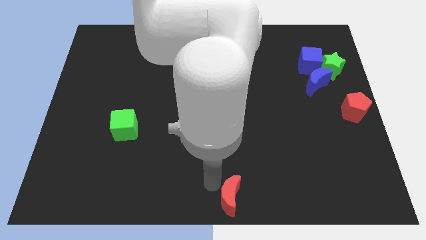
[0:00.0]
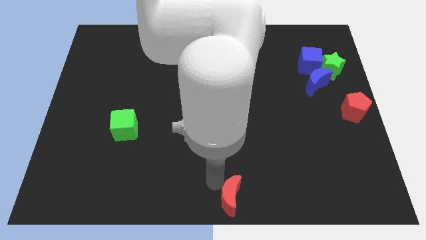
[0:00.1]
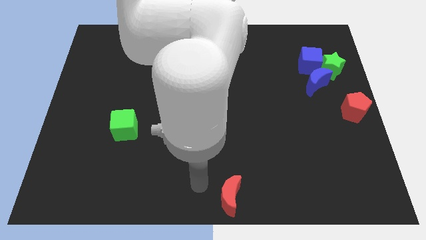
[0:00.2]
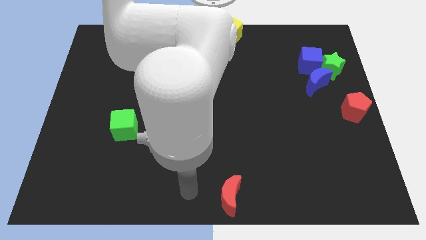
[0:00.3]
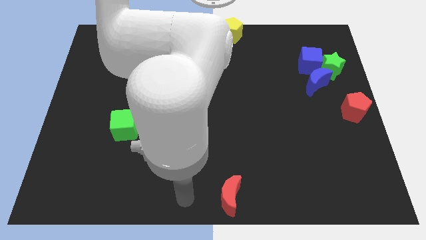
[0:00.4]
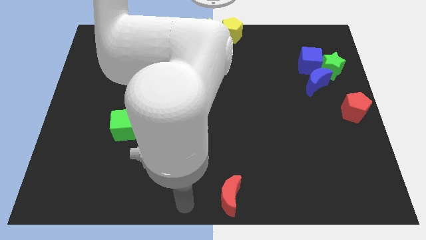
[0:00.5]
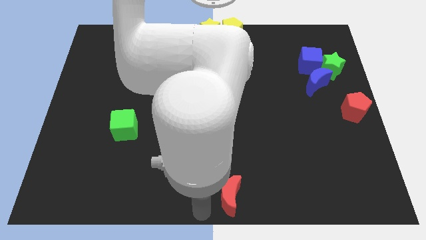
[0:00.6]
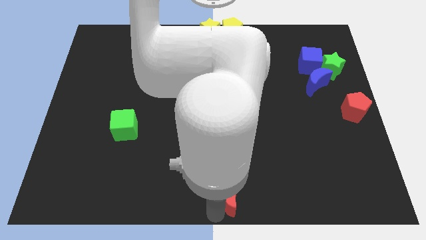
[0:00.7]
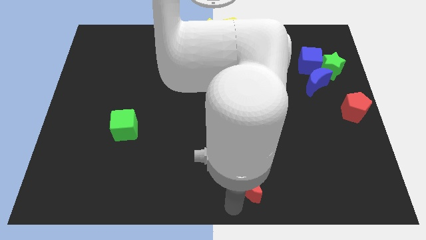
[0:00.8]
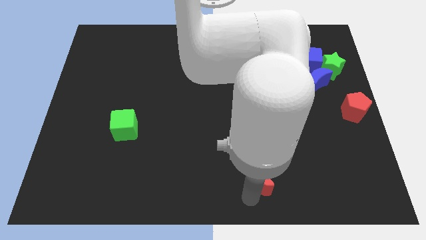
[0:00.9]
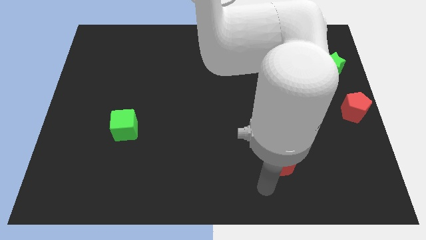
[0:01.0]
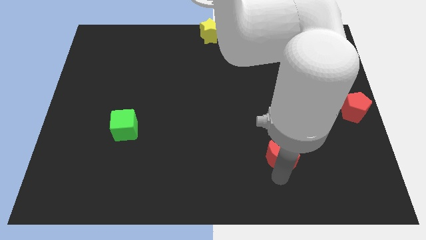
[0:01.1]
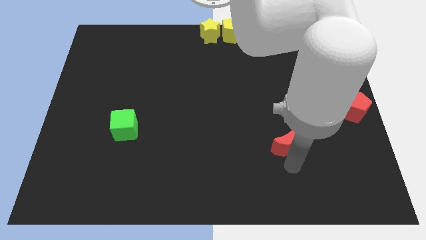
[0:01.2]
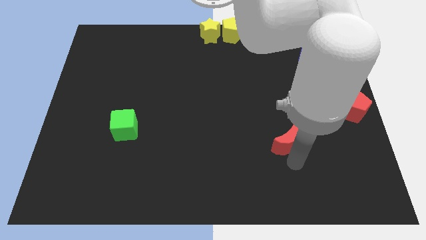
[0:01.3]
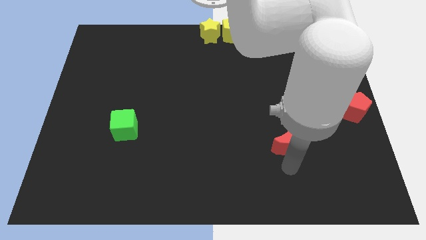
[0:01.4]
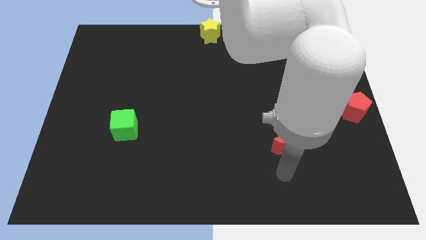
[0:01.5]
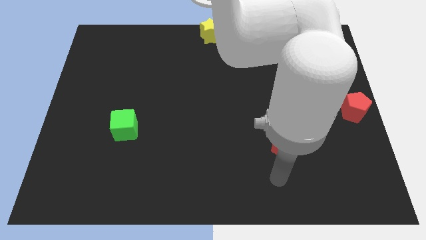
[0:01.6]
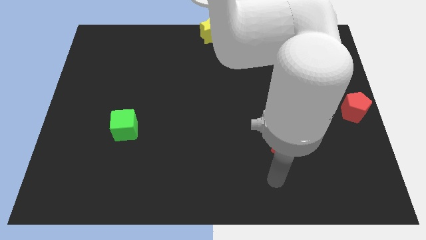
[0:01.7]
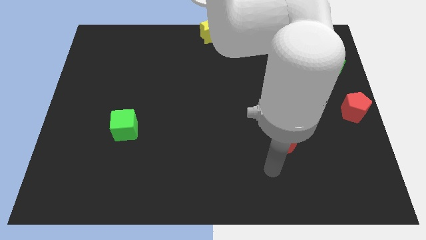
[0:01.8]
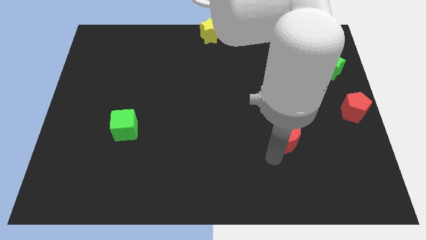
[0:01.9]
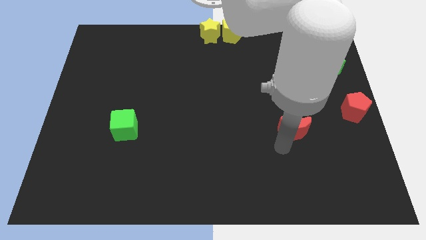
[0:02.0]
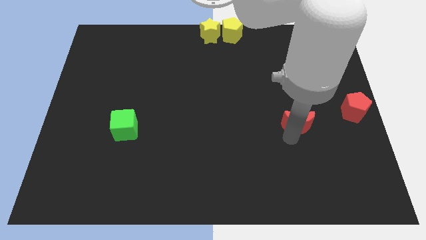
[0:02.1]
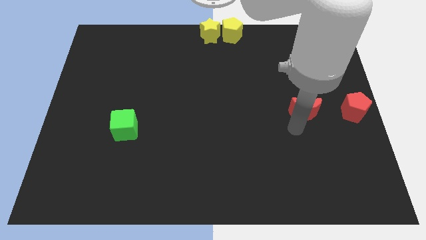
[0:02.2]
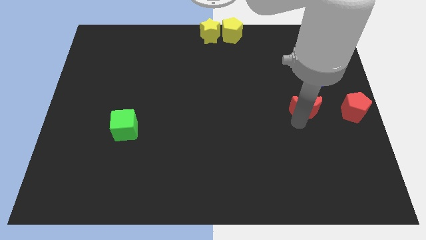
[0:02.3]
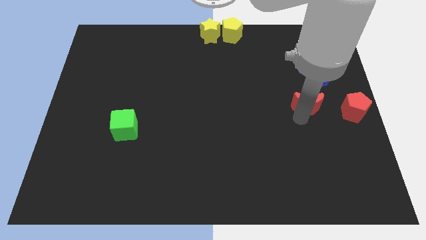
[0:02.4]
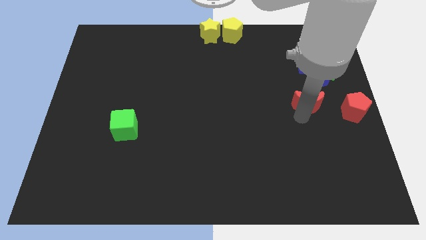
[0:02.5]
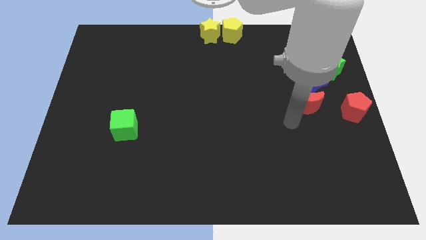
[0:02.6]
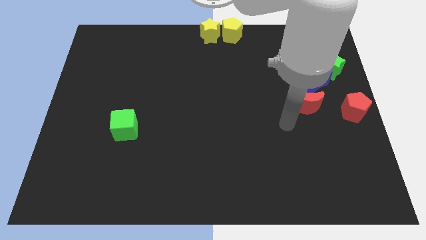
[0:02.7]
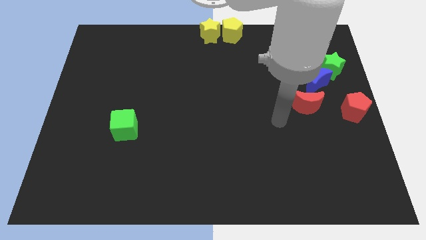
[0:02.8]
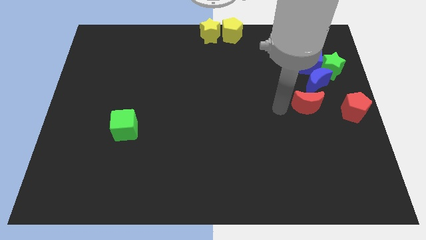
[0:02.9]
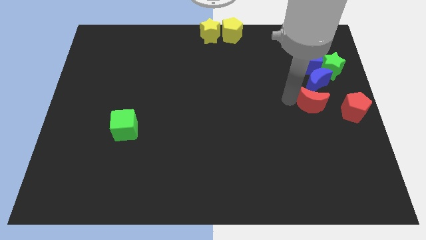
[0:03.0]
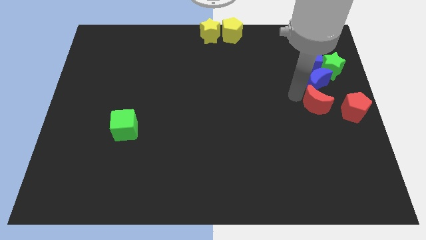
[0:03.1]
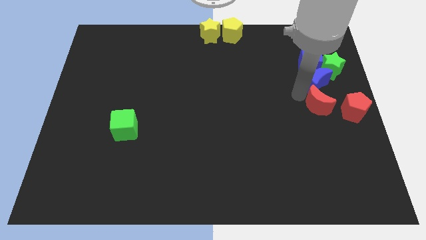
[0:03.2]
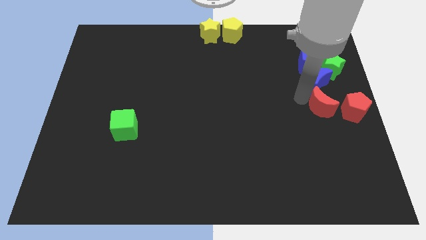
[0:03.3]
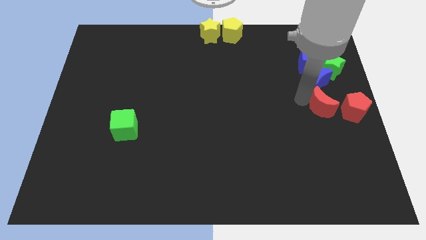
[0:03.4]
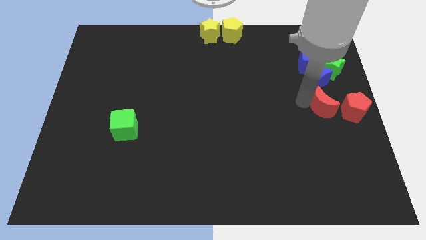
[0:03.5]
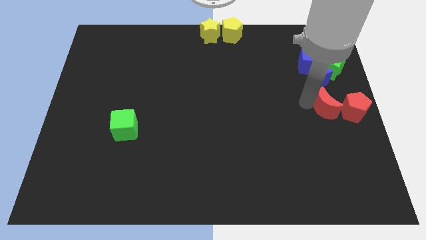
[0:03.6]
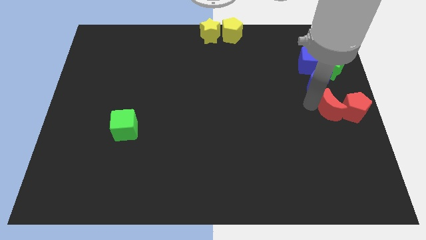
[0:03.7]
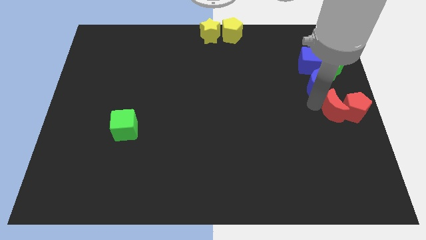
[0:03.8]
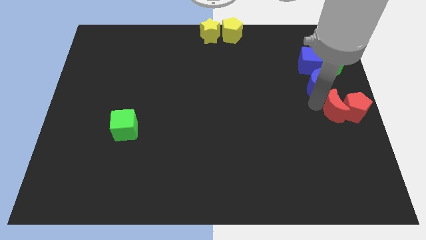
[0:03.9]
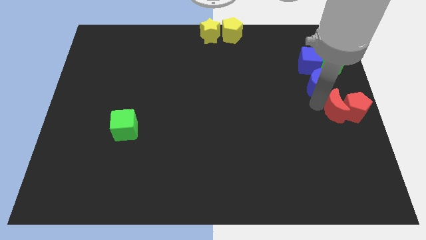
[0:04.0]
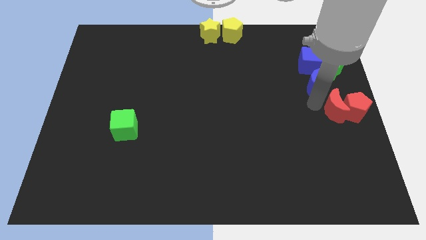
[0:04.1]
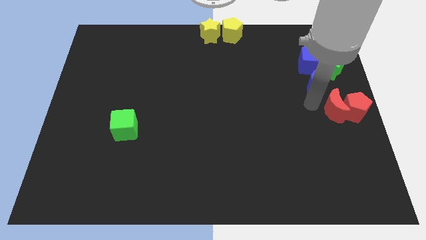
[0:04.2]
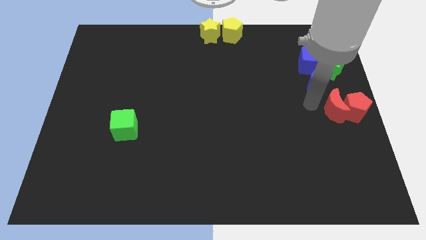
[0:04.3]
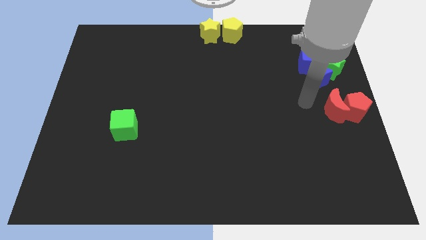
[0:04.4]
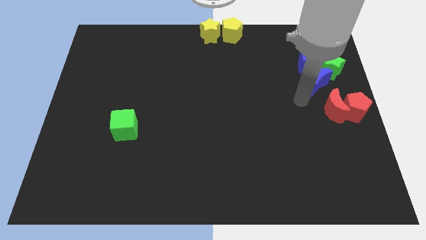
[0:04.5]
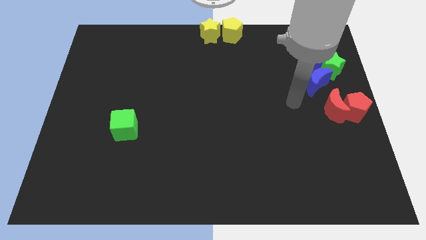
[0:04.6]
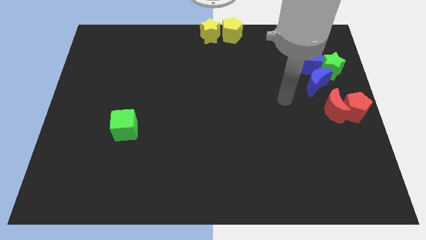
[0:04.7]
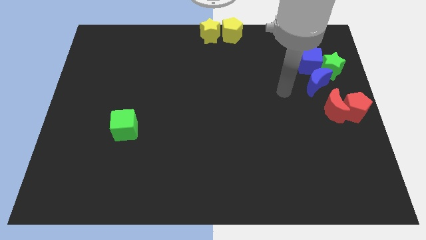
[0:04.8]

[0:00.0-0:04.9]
place the red crescent to the left of the red pentagon

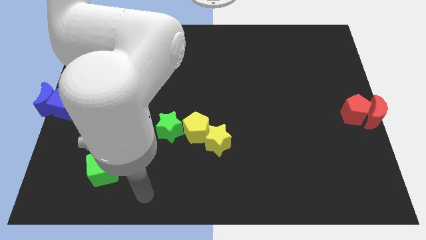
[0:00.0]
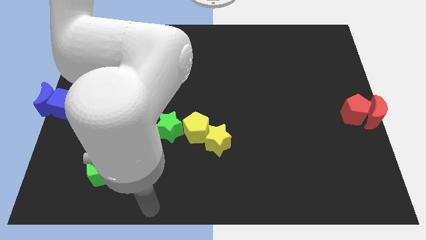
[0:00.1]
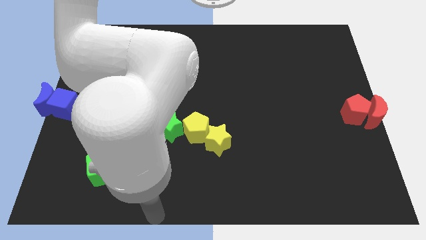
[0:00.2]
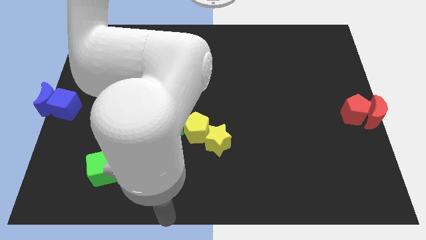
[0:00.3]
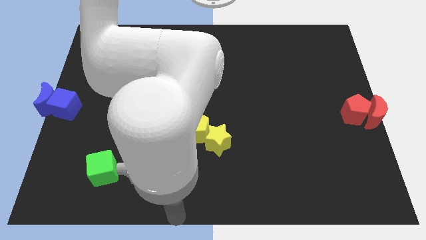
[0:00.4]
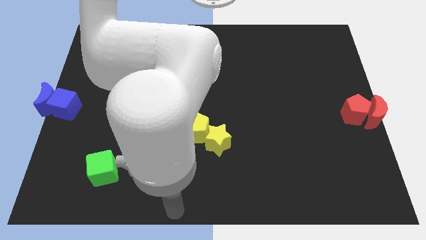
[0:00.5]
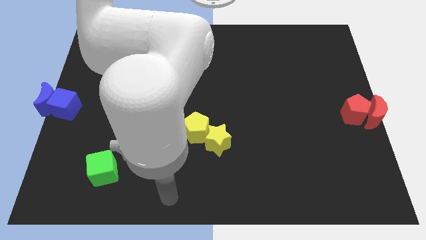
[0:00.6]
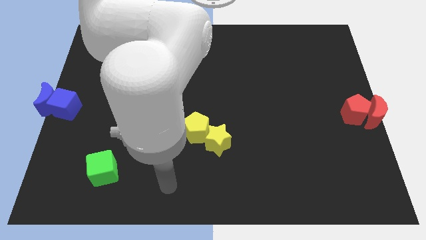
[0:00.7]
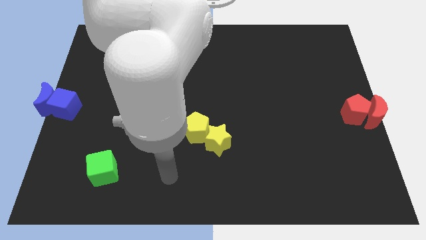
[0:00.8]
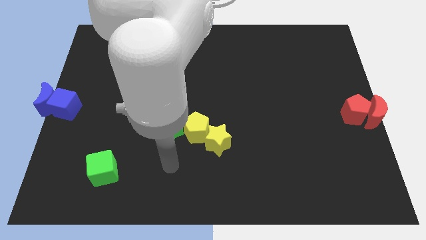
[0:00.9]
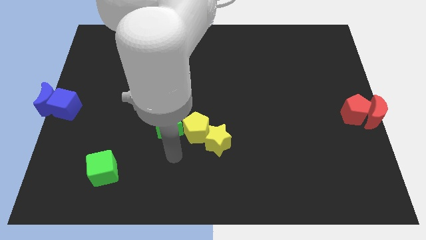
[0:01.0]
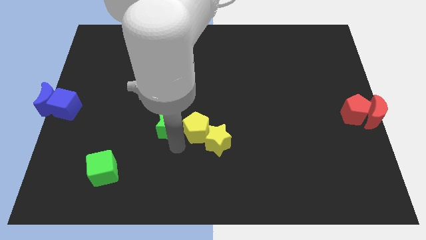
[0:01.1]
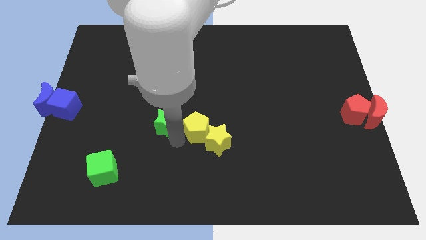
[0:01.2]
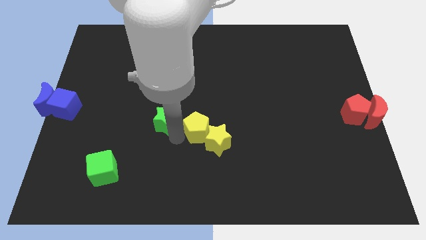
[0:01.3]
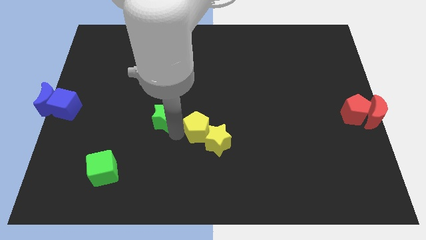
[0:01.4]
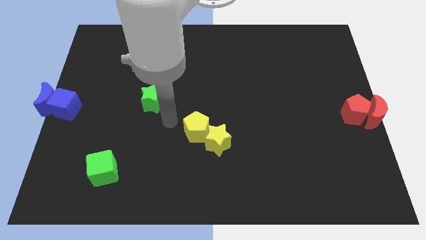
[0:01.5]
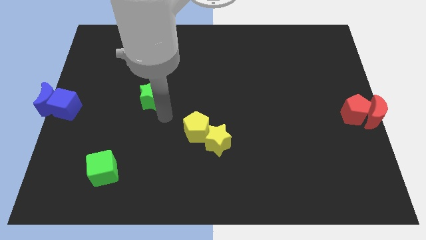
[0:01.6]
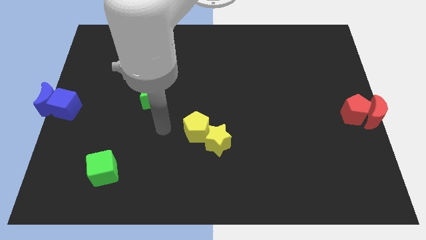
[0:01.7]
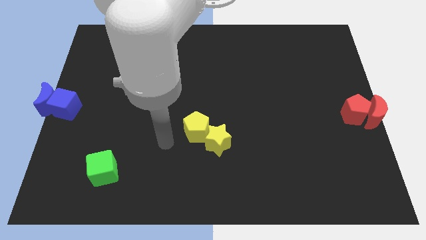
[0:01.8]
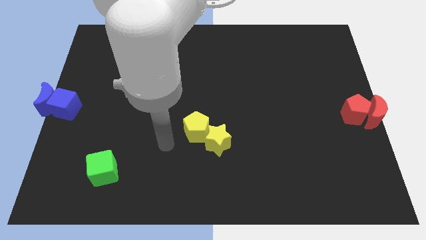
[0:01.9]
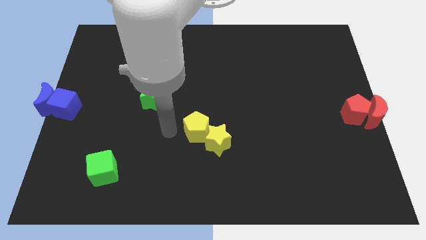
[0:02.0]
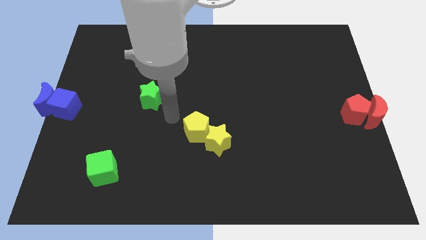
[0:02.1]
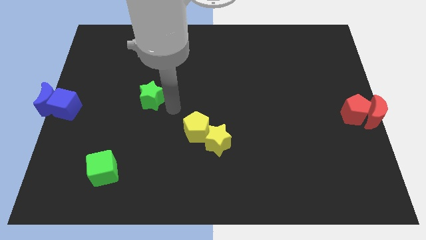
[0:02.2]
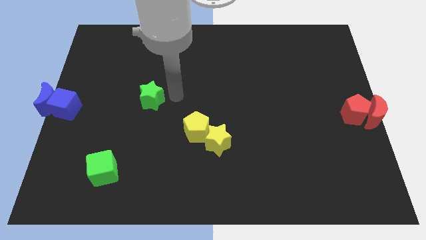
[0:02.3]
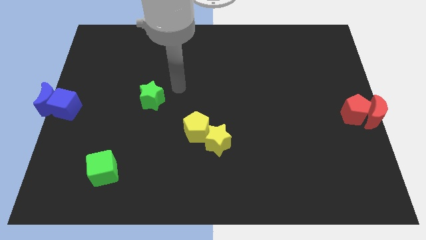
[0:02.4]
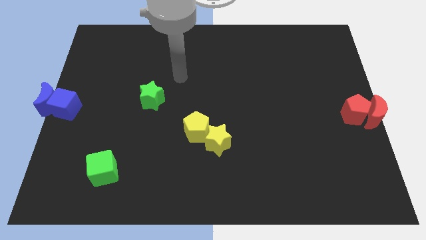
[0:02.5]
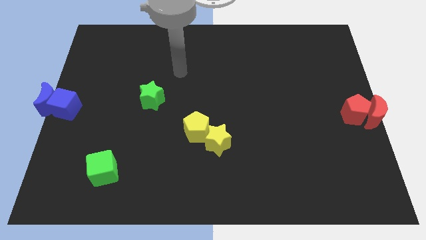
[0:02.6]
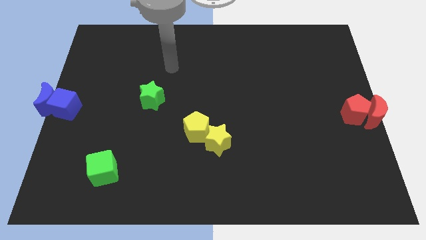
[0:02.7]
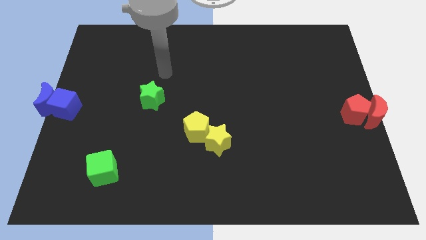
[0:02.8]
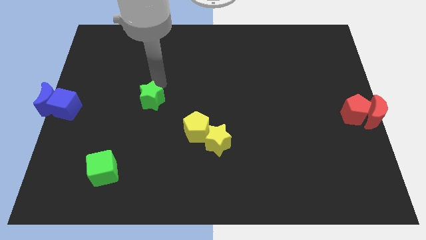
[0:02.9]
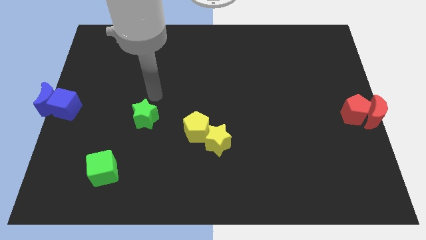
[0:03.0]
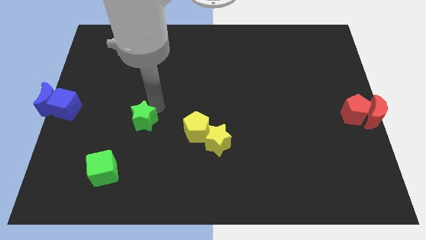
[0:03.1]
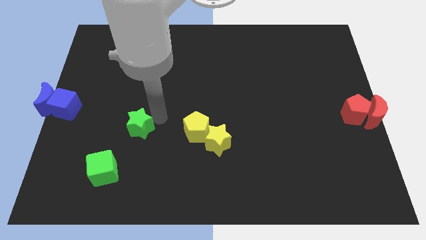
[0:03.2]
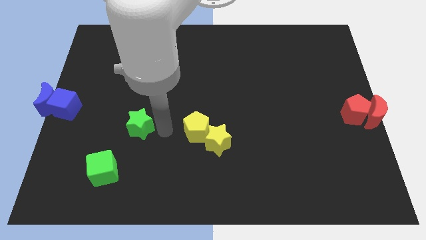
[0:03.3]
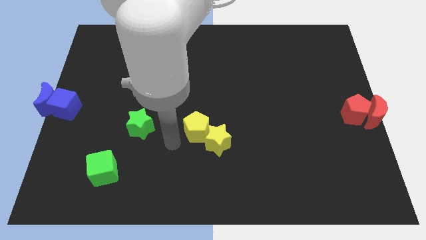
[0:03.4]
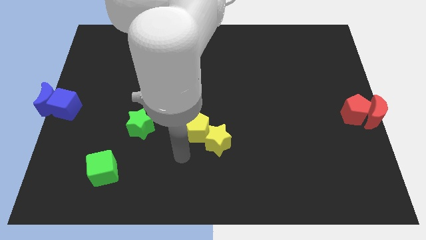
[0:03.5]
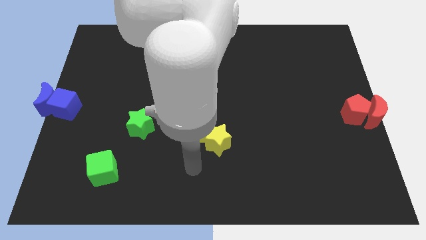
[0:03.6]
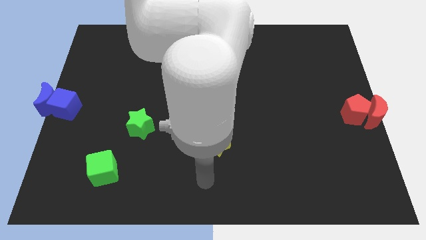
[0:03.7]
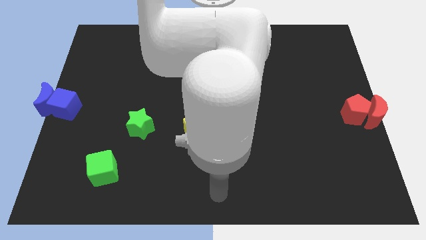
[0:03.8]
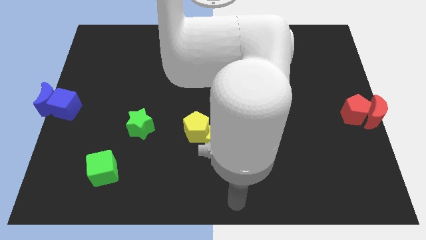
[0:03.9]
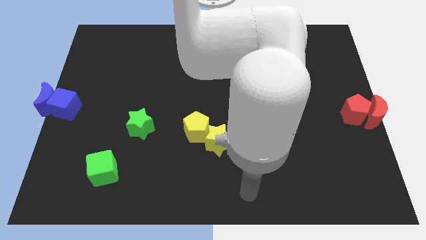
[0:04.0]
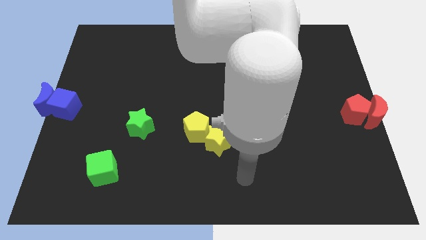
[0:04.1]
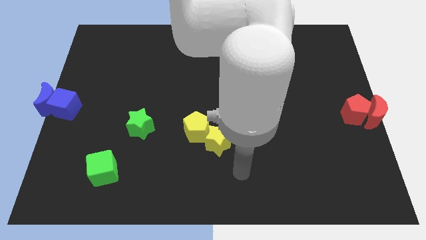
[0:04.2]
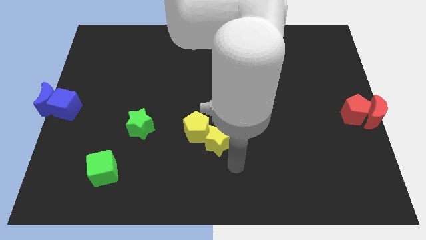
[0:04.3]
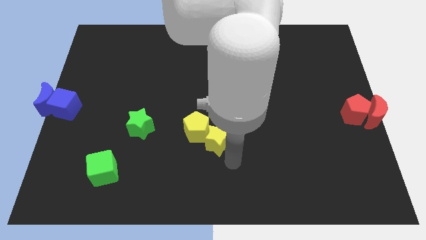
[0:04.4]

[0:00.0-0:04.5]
separate the green star from the yellow pentagon
